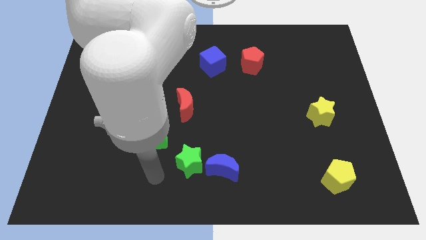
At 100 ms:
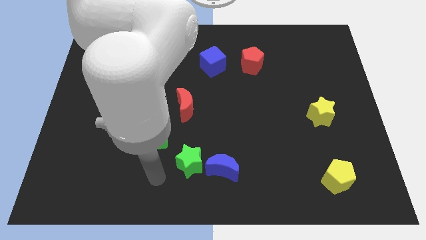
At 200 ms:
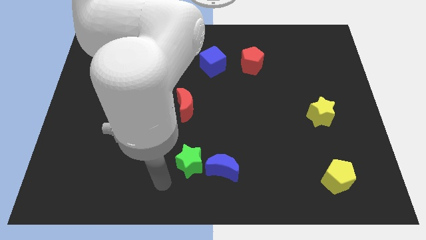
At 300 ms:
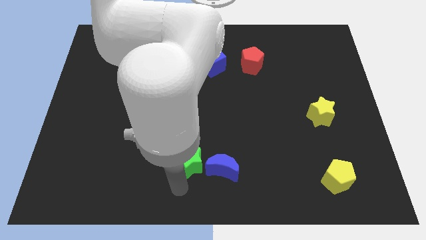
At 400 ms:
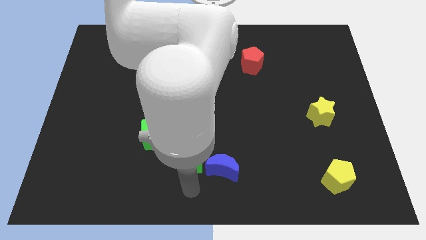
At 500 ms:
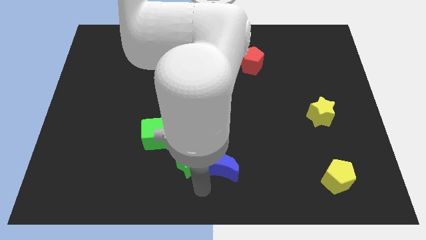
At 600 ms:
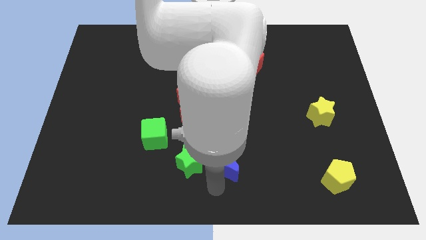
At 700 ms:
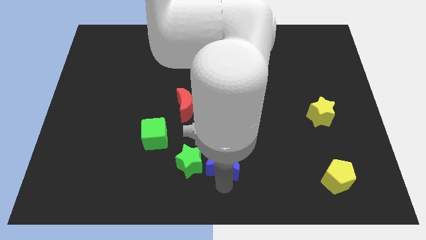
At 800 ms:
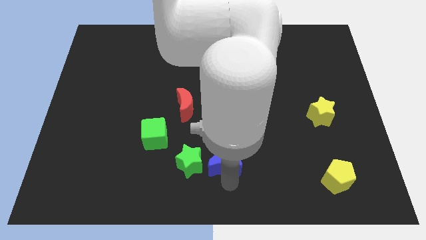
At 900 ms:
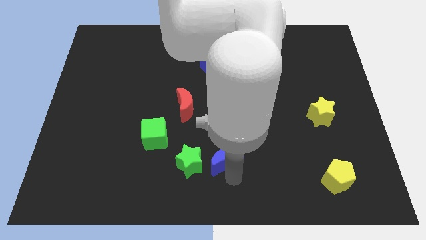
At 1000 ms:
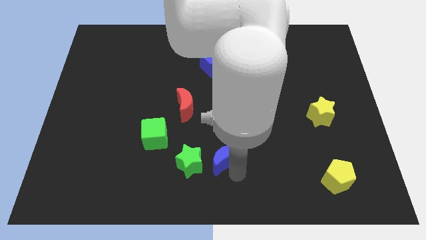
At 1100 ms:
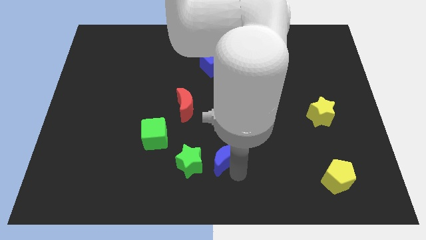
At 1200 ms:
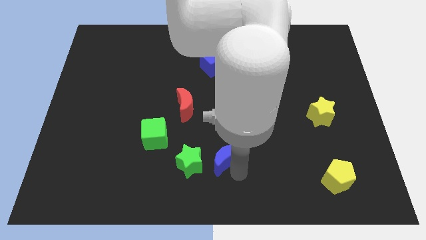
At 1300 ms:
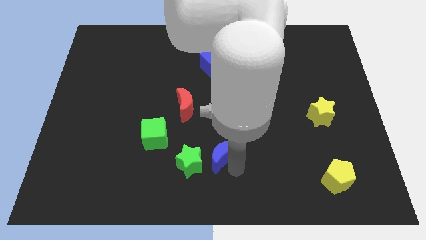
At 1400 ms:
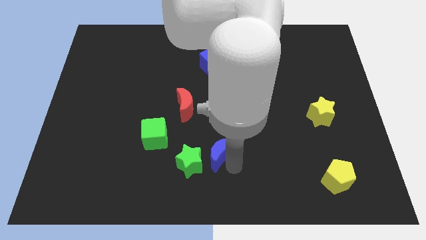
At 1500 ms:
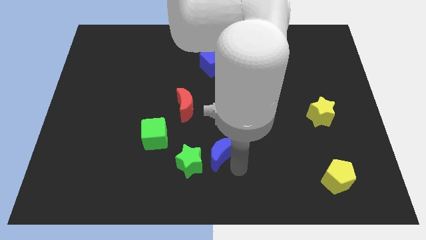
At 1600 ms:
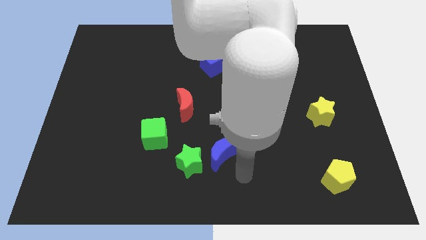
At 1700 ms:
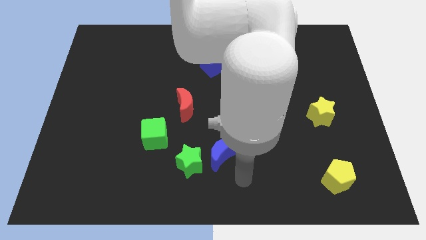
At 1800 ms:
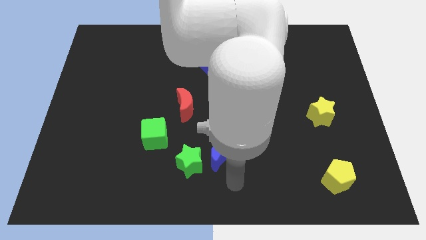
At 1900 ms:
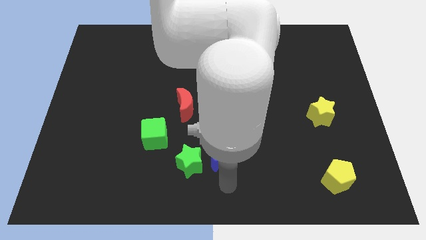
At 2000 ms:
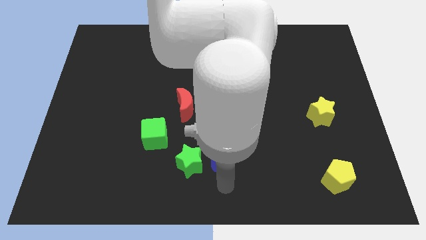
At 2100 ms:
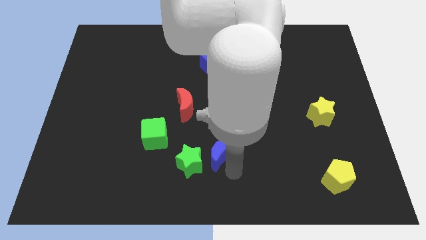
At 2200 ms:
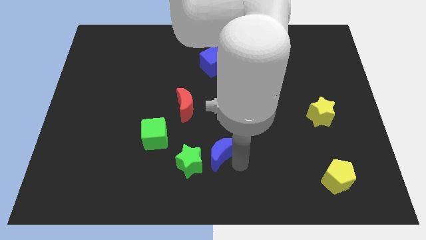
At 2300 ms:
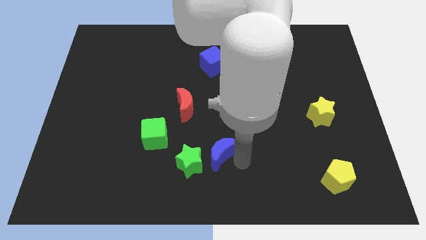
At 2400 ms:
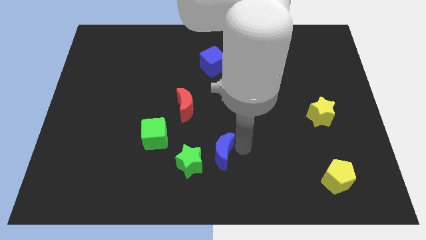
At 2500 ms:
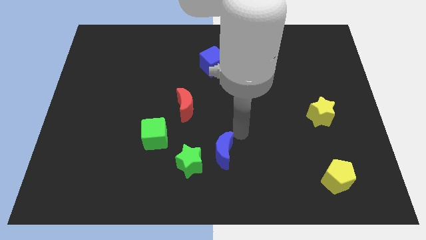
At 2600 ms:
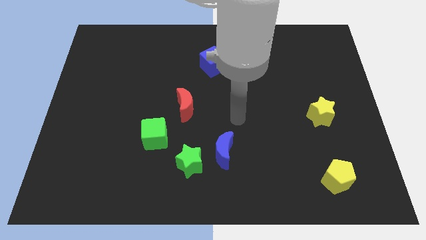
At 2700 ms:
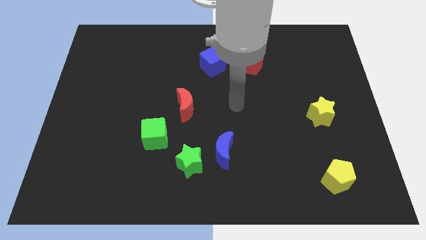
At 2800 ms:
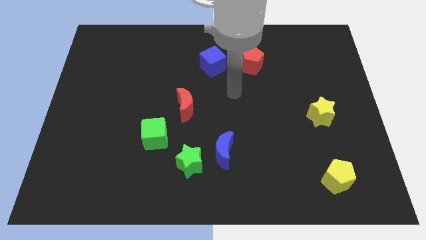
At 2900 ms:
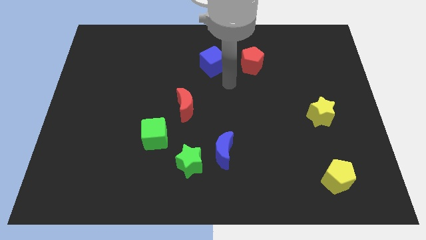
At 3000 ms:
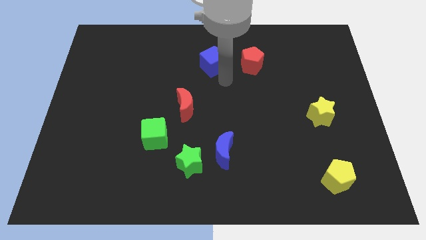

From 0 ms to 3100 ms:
push the blue crescent slightly to the top

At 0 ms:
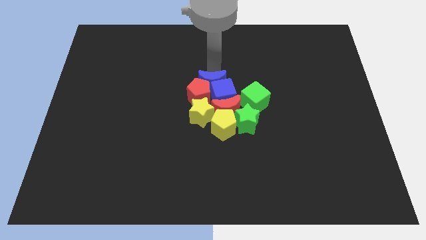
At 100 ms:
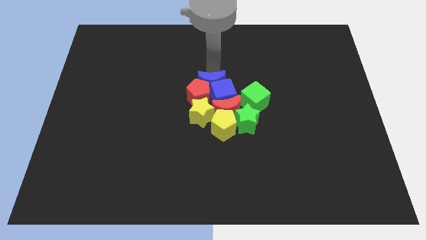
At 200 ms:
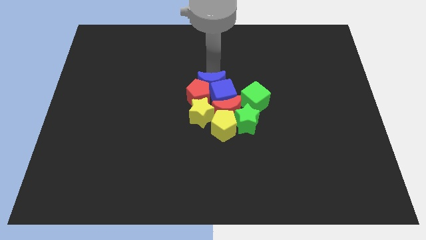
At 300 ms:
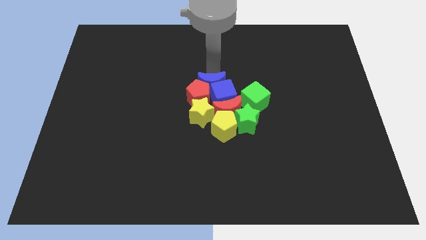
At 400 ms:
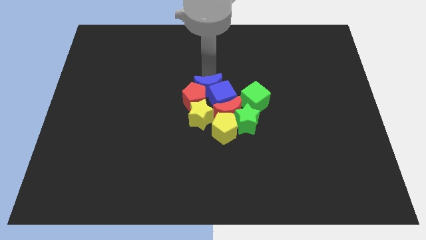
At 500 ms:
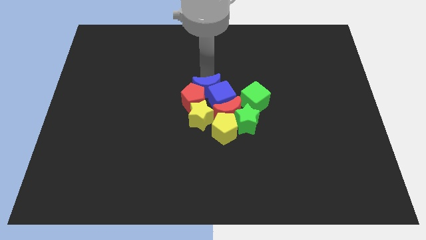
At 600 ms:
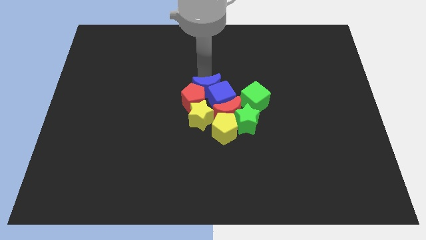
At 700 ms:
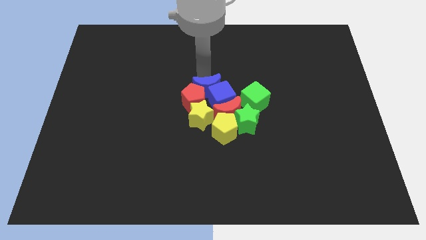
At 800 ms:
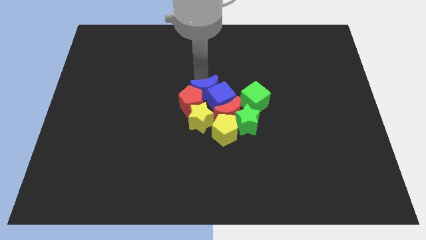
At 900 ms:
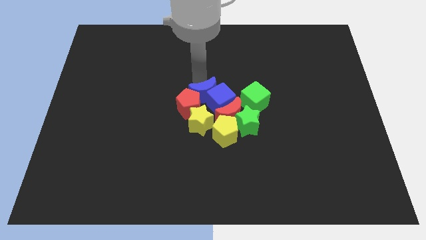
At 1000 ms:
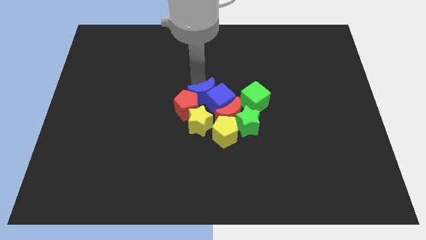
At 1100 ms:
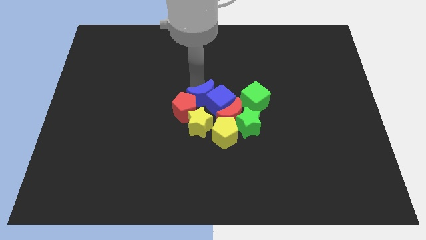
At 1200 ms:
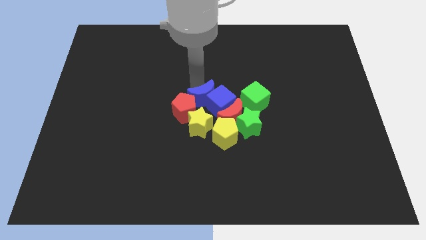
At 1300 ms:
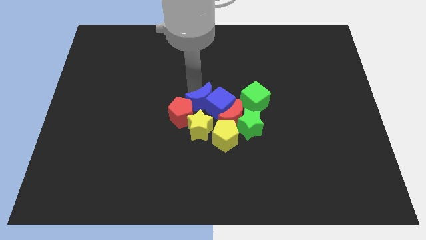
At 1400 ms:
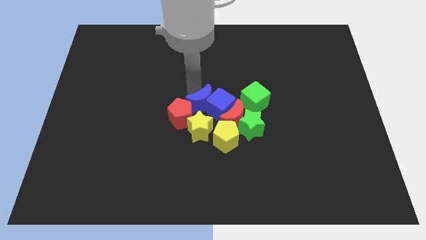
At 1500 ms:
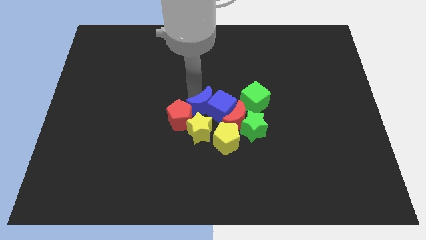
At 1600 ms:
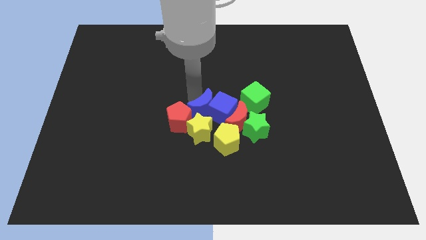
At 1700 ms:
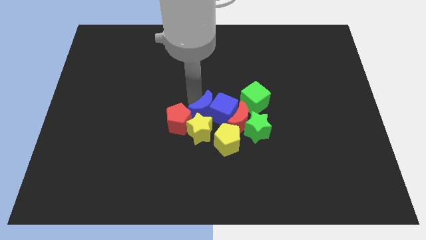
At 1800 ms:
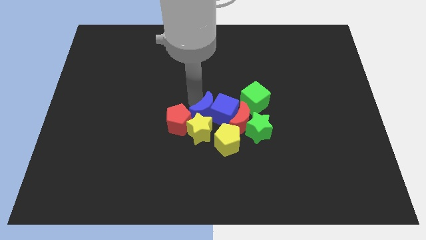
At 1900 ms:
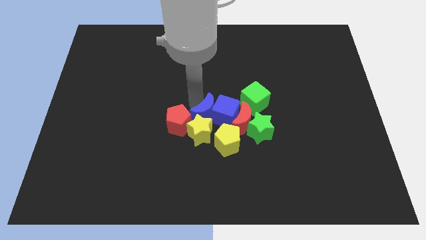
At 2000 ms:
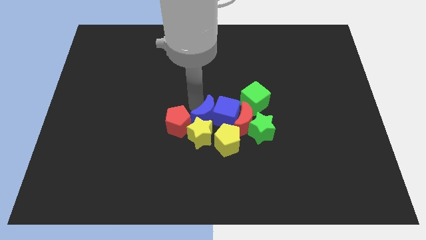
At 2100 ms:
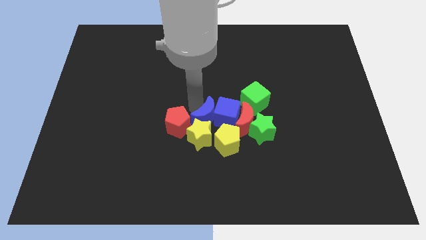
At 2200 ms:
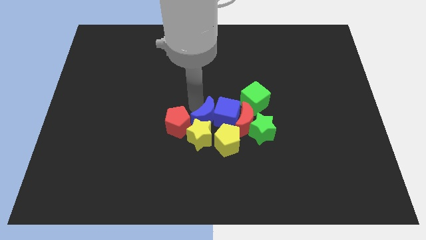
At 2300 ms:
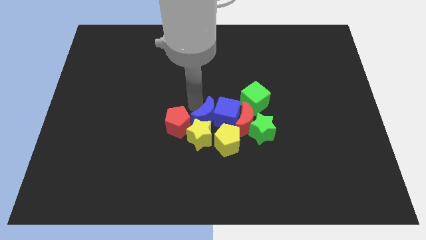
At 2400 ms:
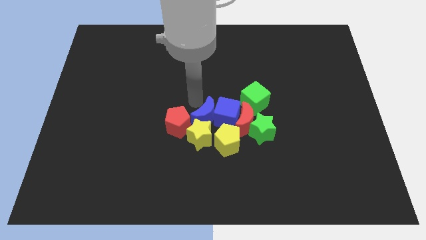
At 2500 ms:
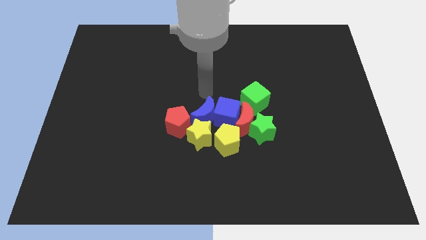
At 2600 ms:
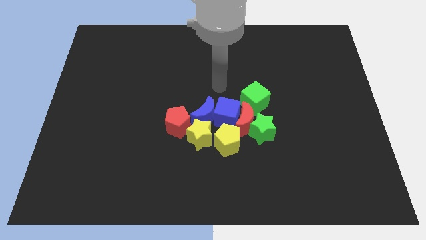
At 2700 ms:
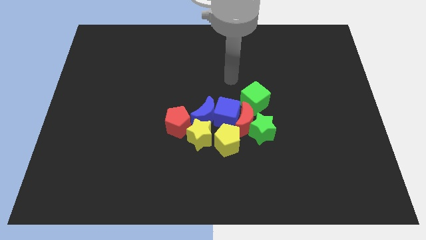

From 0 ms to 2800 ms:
push the blue crescent to the top of the yellow star

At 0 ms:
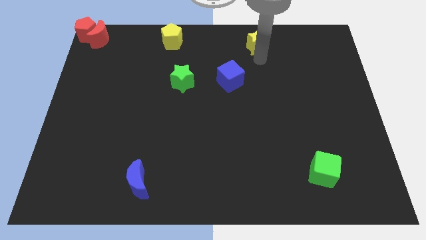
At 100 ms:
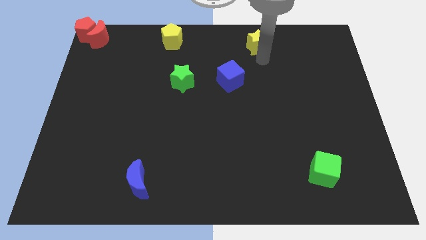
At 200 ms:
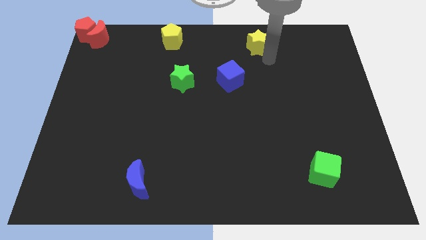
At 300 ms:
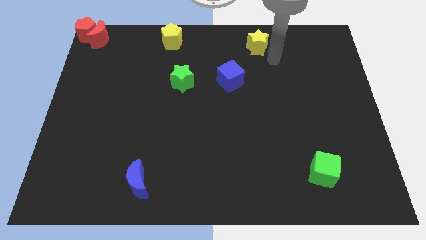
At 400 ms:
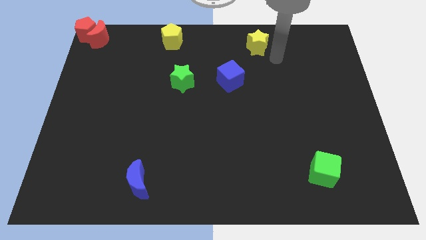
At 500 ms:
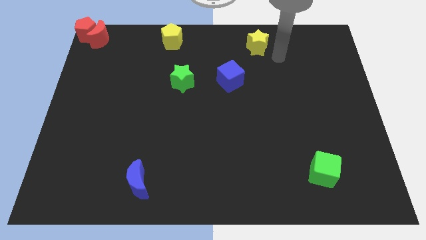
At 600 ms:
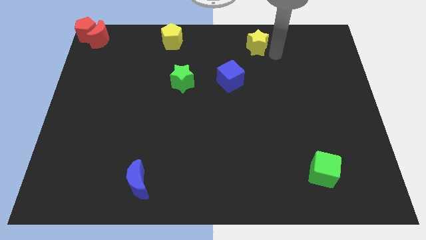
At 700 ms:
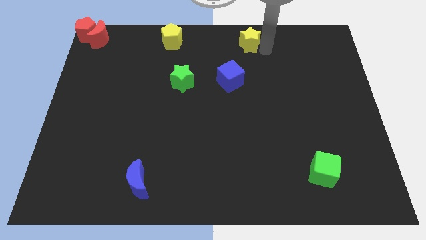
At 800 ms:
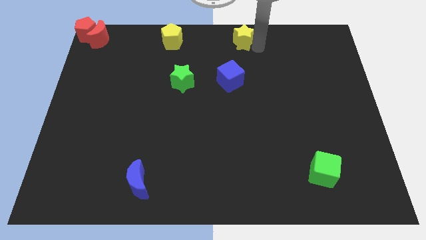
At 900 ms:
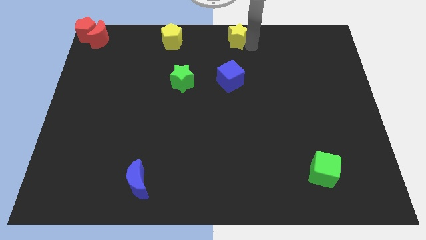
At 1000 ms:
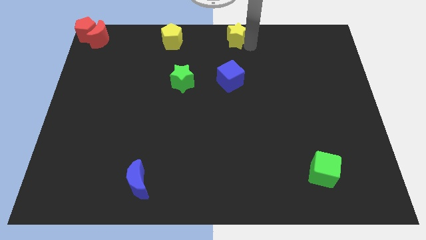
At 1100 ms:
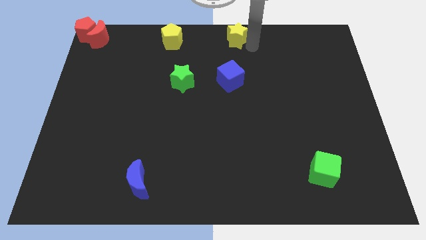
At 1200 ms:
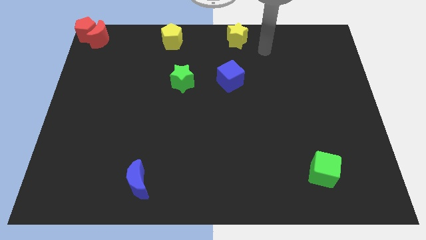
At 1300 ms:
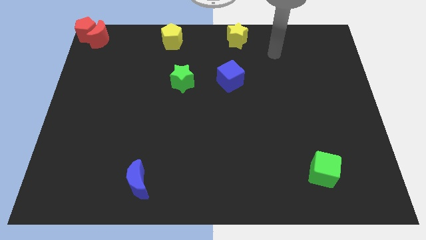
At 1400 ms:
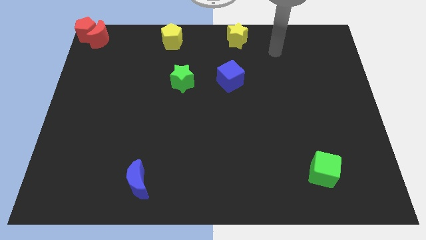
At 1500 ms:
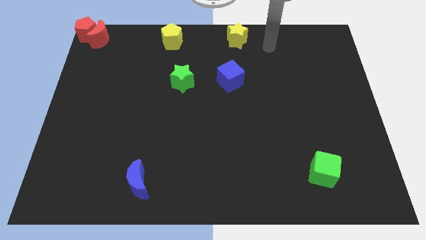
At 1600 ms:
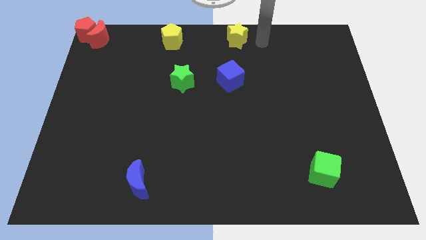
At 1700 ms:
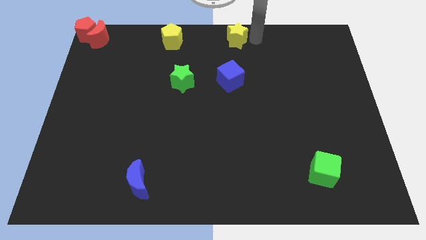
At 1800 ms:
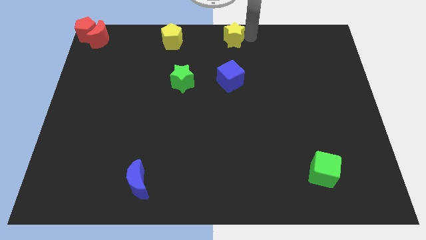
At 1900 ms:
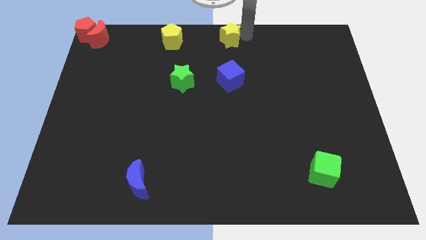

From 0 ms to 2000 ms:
move the yellow star vertically above the blue cube

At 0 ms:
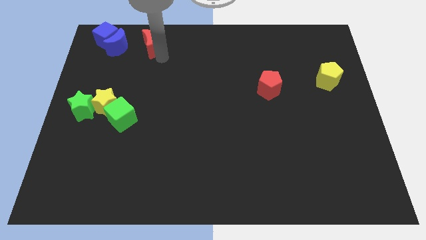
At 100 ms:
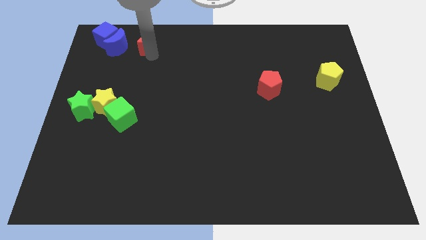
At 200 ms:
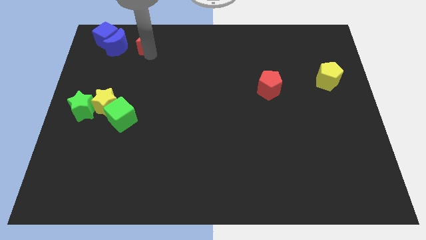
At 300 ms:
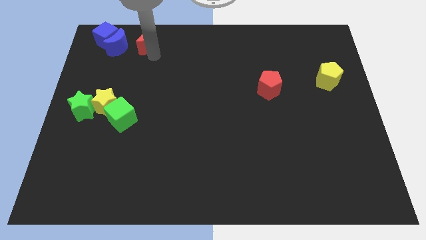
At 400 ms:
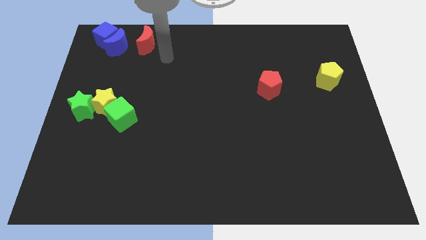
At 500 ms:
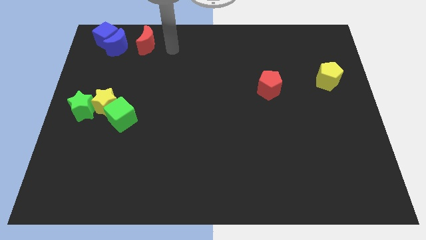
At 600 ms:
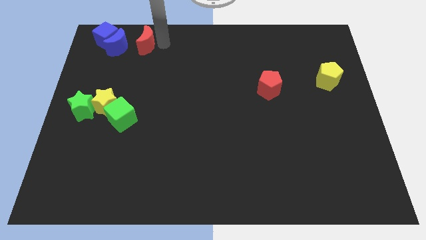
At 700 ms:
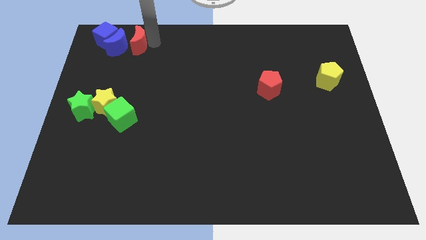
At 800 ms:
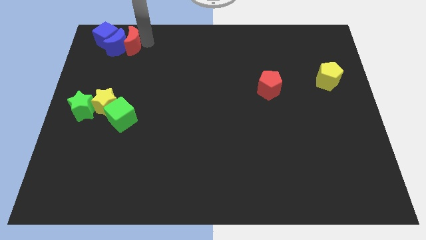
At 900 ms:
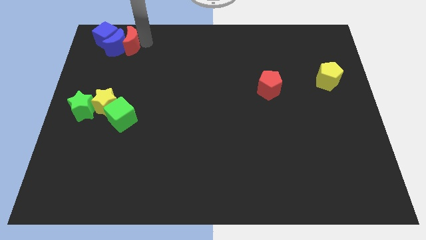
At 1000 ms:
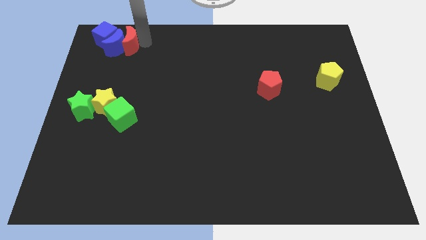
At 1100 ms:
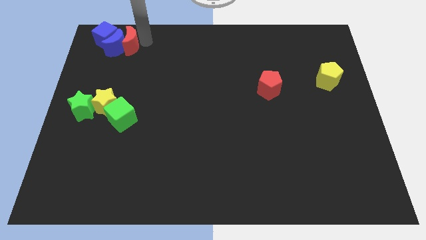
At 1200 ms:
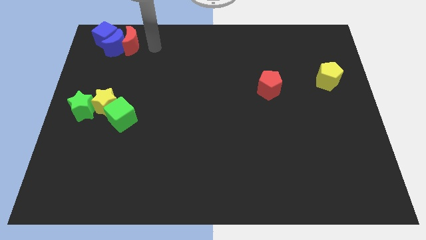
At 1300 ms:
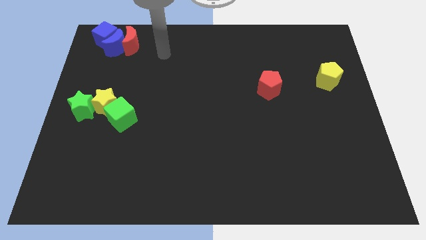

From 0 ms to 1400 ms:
move the red crescent into the blue crescent
